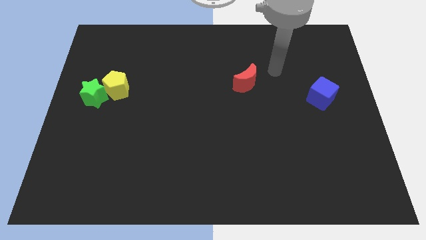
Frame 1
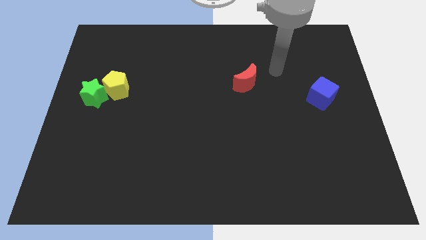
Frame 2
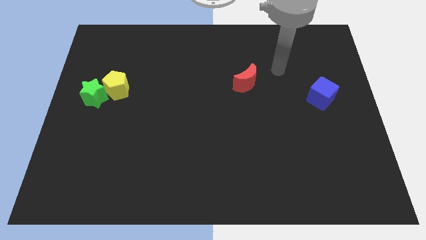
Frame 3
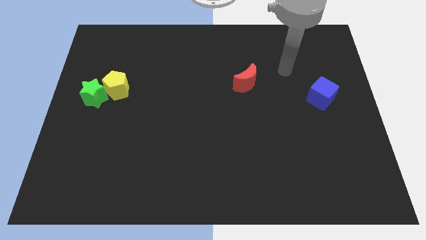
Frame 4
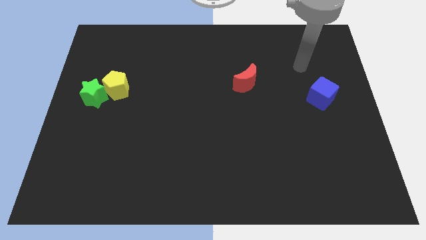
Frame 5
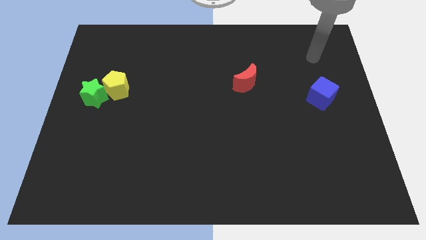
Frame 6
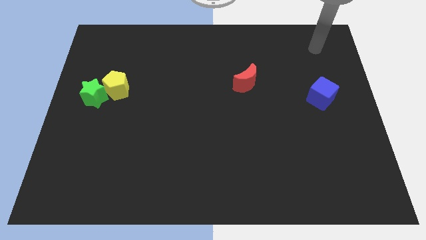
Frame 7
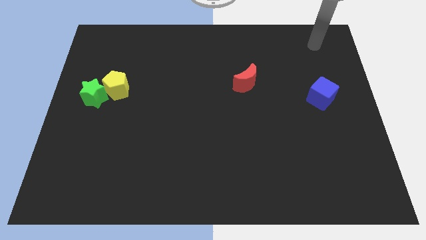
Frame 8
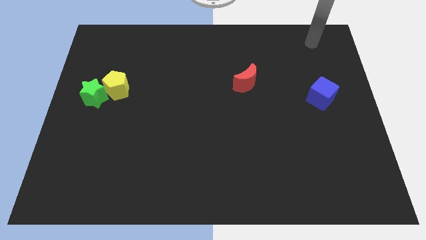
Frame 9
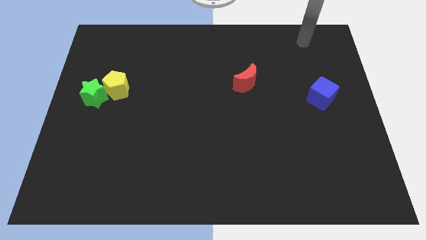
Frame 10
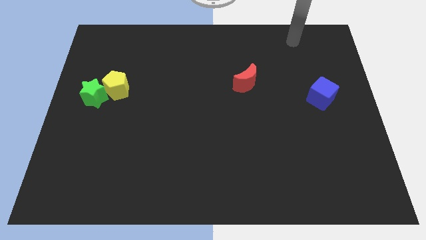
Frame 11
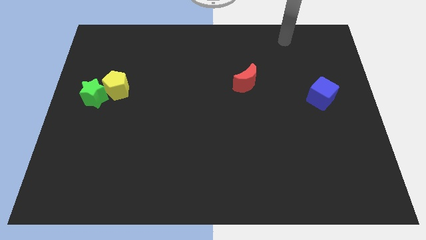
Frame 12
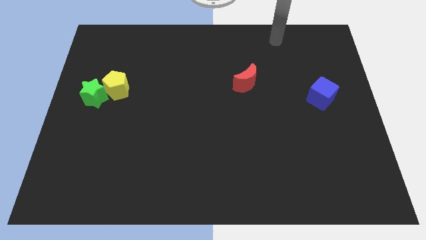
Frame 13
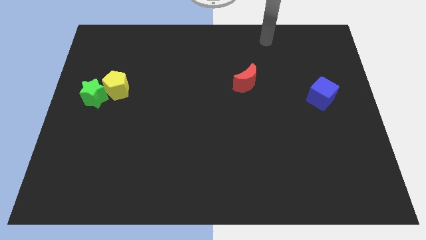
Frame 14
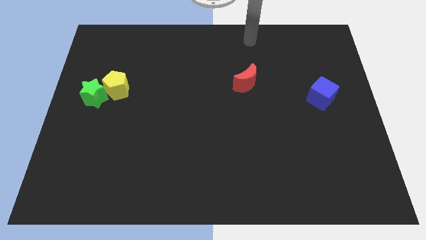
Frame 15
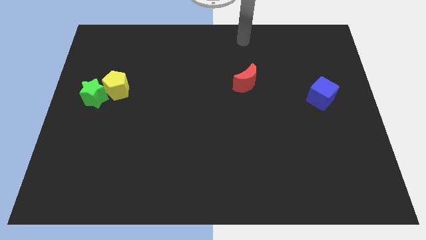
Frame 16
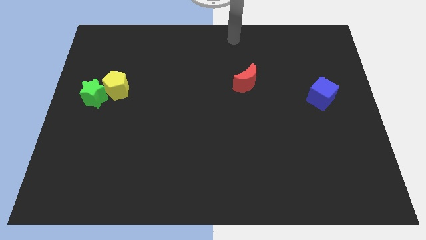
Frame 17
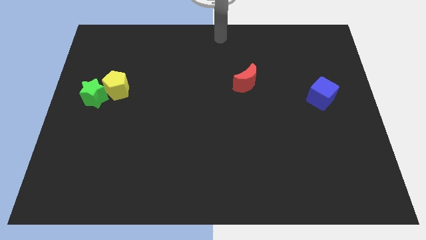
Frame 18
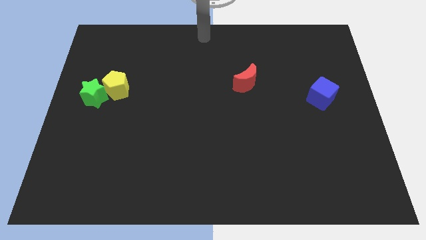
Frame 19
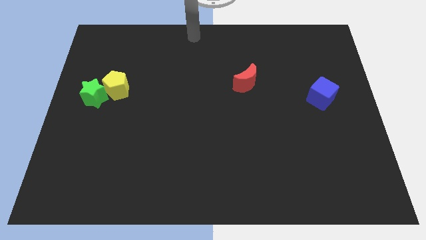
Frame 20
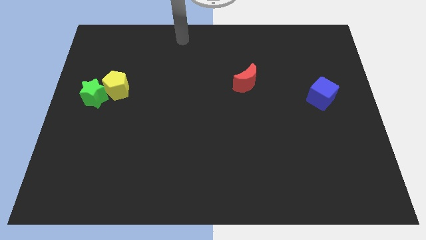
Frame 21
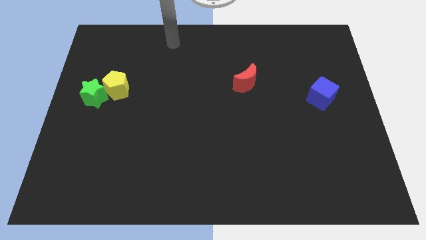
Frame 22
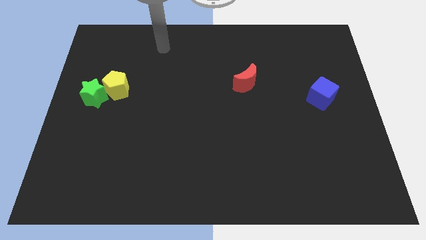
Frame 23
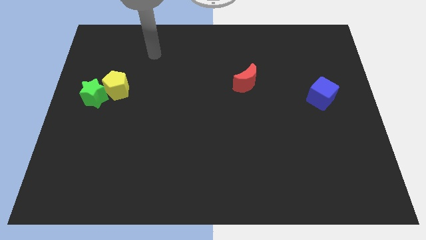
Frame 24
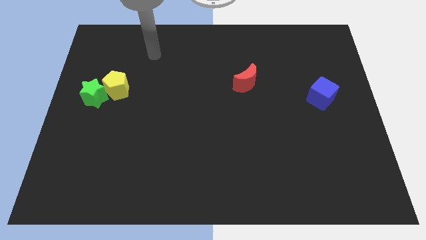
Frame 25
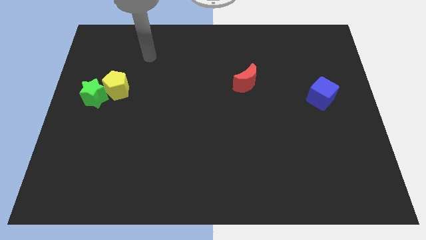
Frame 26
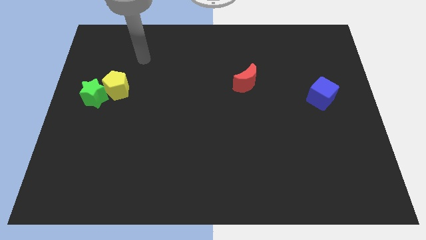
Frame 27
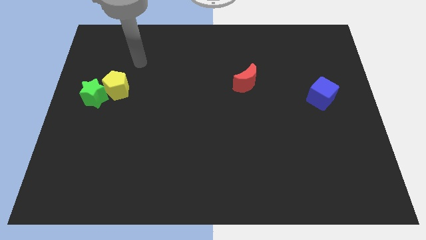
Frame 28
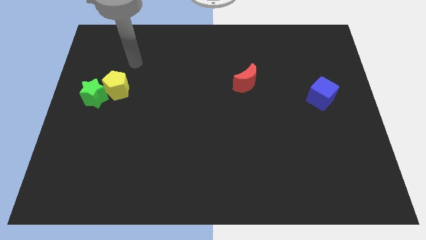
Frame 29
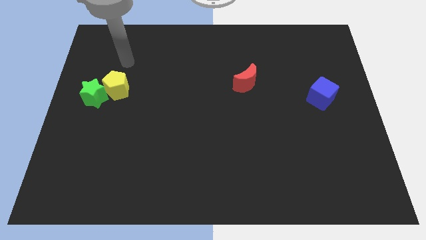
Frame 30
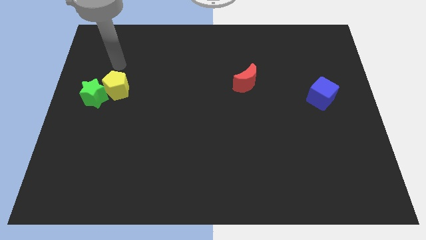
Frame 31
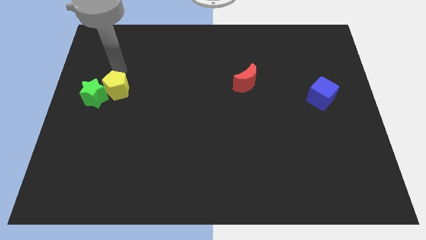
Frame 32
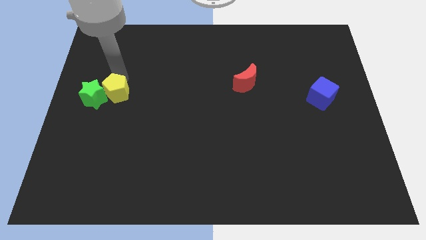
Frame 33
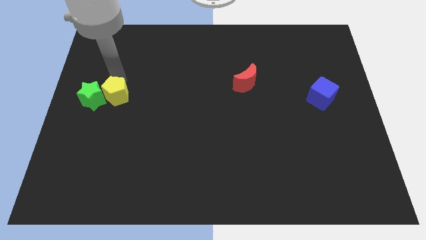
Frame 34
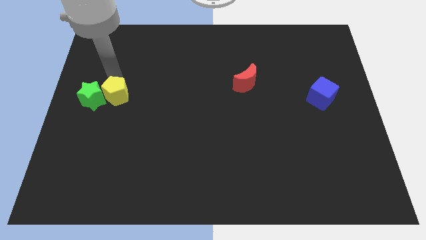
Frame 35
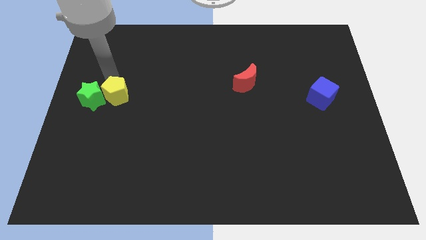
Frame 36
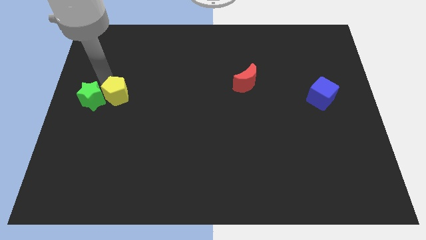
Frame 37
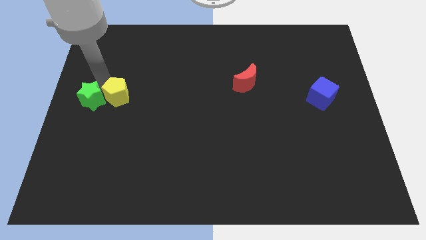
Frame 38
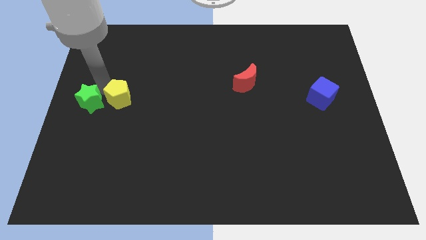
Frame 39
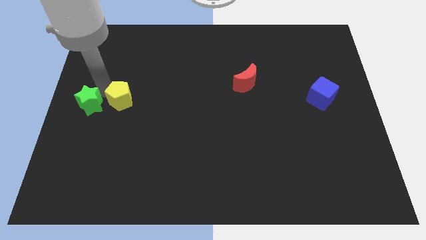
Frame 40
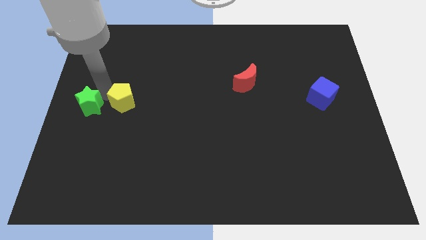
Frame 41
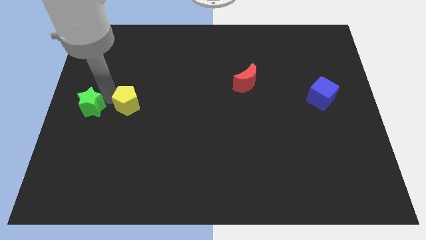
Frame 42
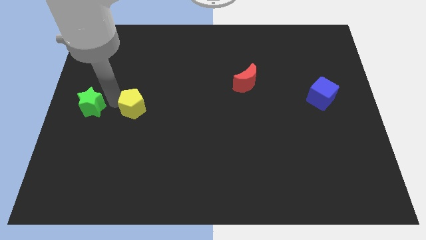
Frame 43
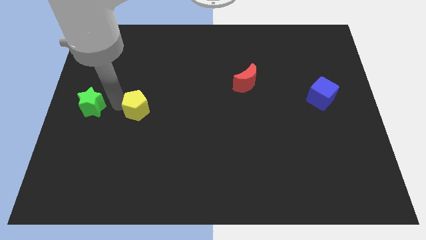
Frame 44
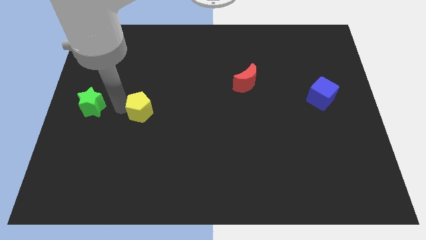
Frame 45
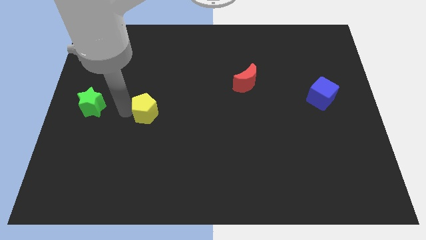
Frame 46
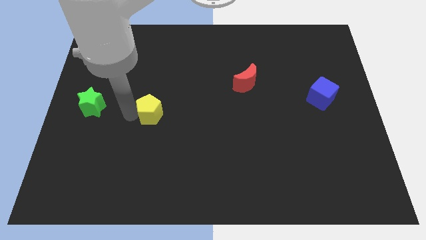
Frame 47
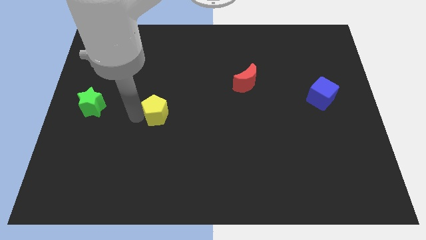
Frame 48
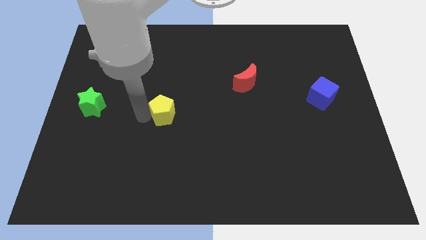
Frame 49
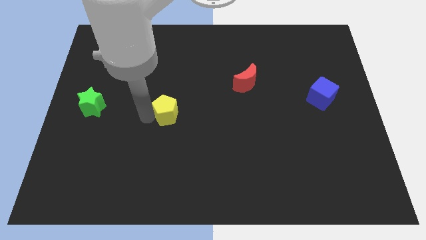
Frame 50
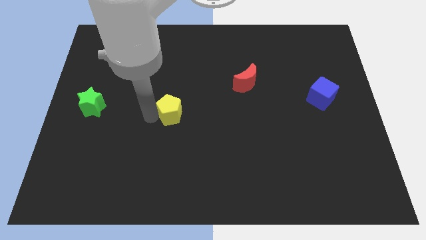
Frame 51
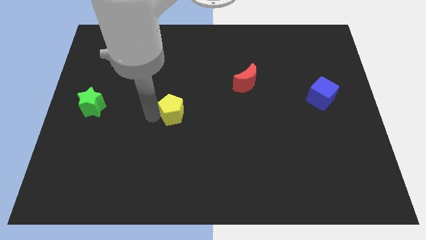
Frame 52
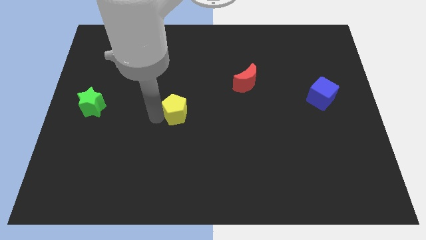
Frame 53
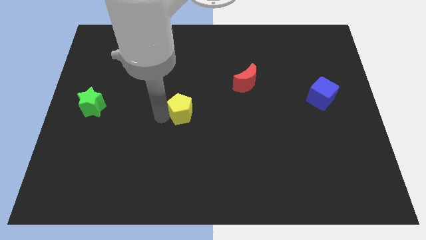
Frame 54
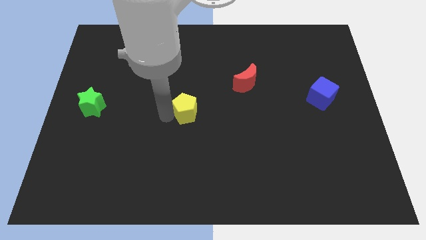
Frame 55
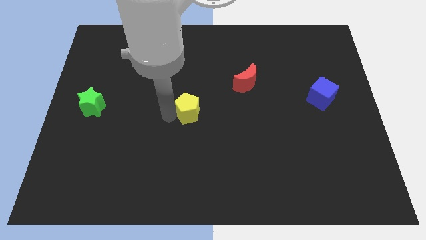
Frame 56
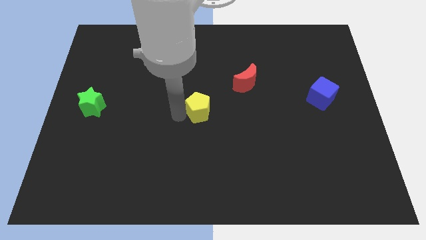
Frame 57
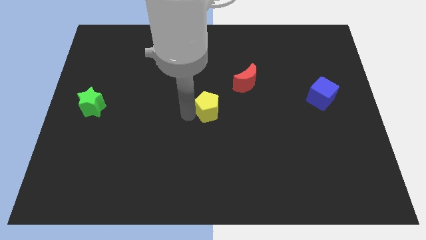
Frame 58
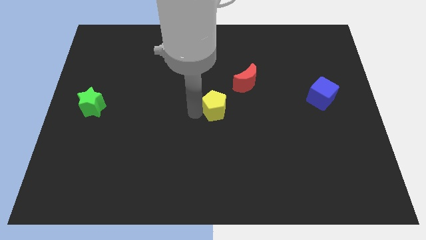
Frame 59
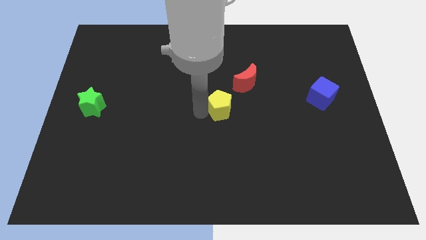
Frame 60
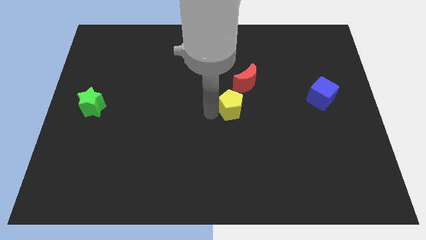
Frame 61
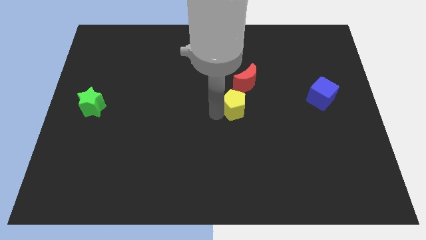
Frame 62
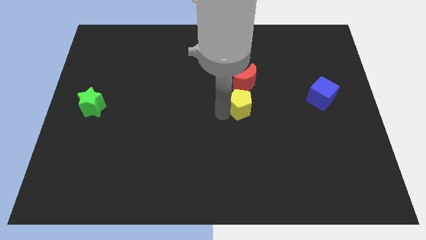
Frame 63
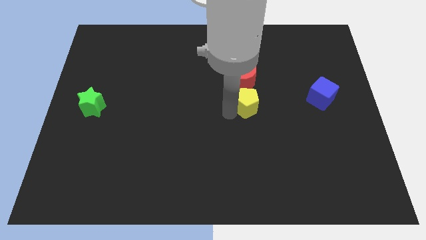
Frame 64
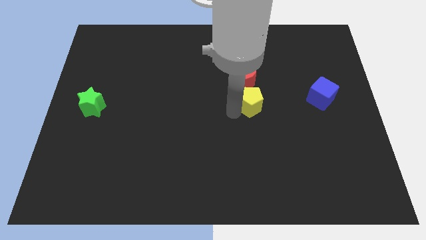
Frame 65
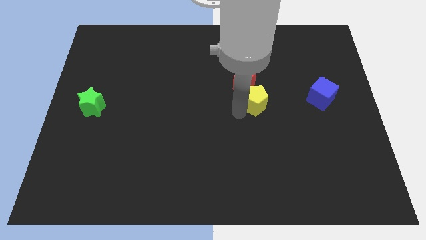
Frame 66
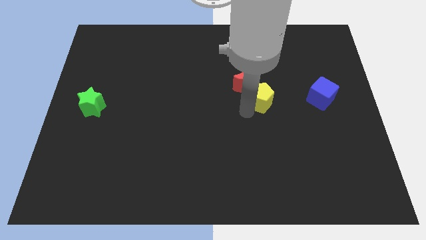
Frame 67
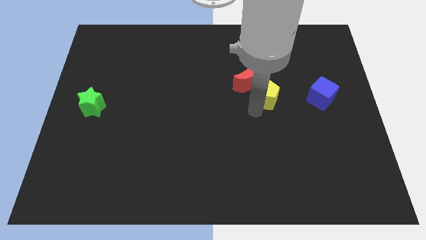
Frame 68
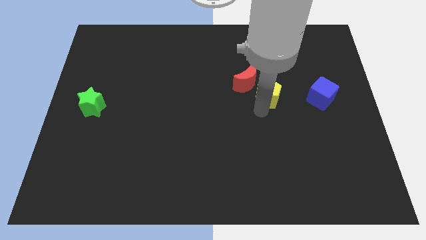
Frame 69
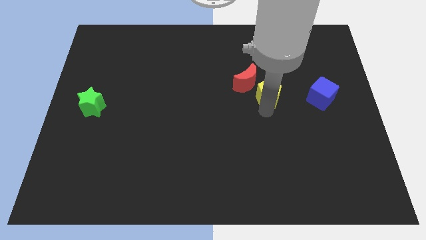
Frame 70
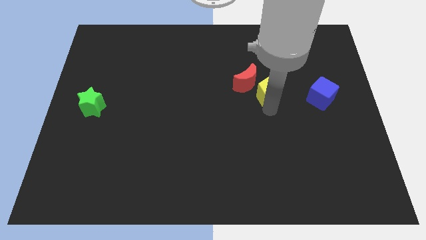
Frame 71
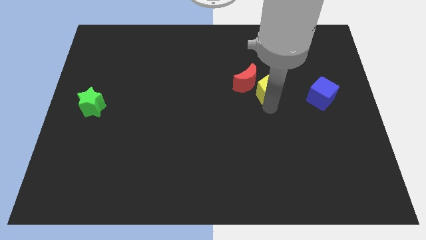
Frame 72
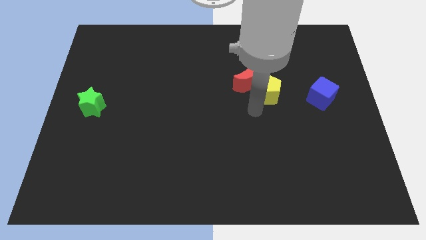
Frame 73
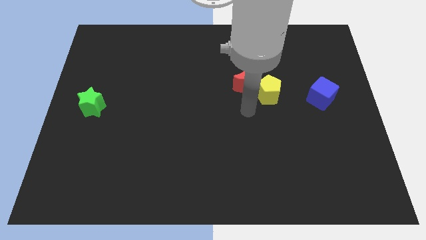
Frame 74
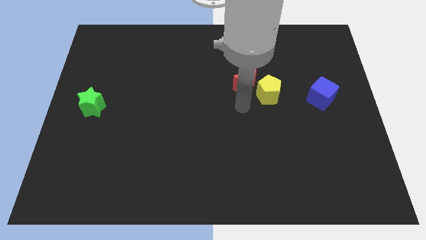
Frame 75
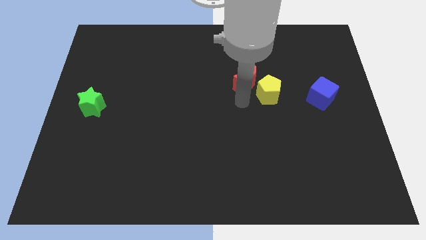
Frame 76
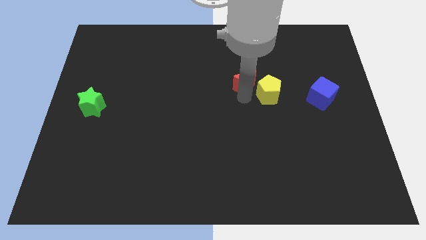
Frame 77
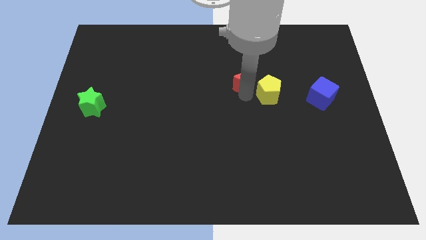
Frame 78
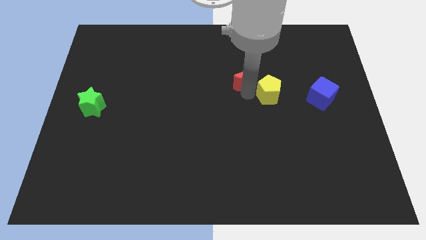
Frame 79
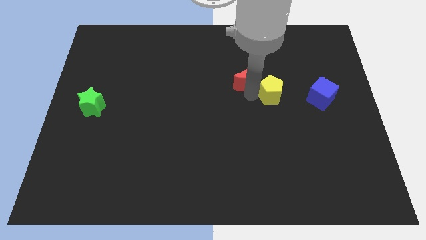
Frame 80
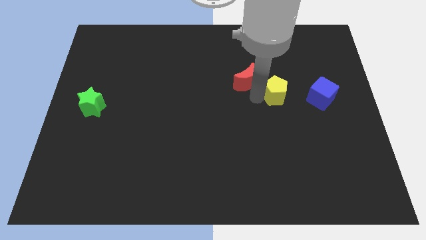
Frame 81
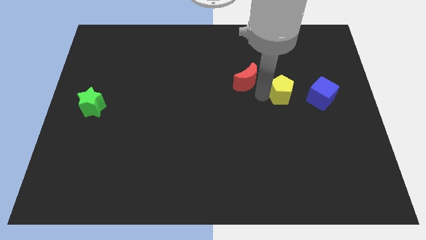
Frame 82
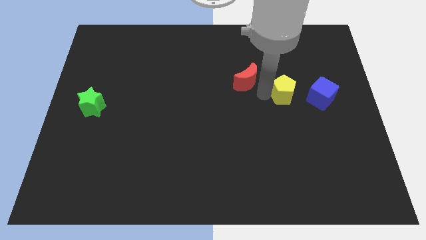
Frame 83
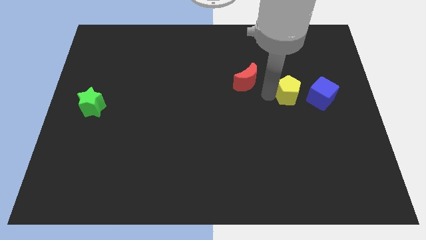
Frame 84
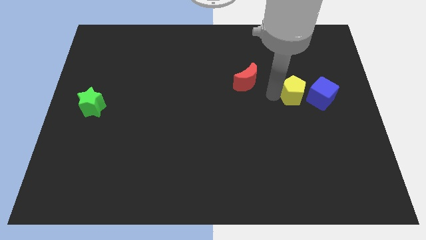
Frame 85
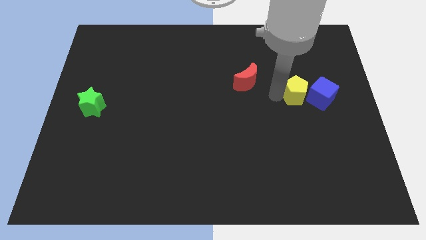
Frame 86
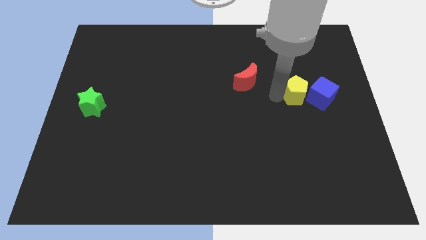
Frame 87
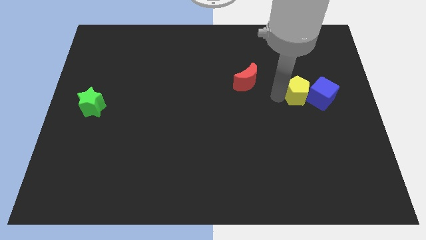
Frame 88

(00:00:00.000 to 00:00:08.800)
slide the yellow pentagon next to the blue cube
